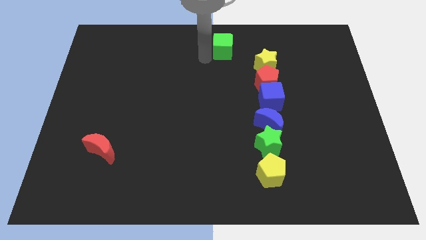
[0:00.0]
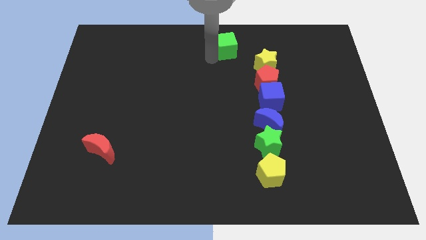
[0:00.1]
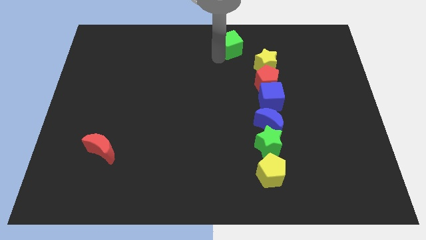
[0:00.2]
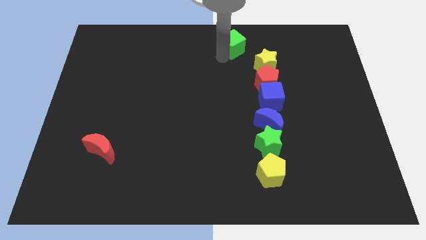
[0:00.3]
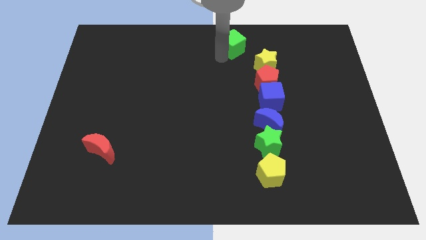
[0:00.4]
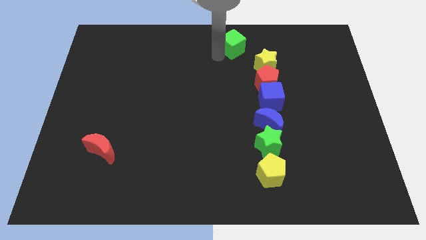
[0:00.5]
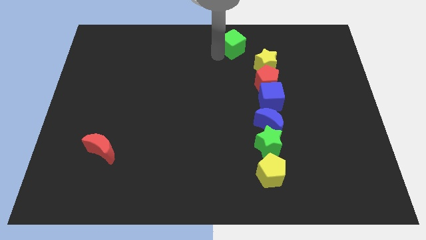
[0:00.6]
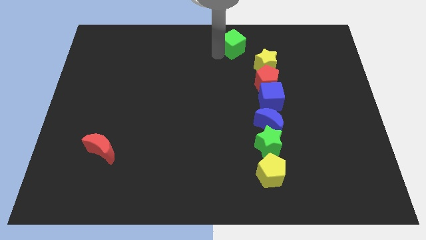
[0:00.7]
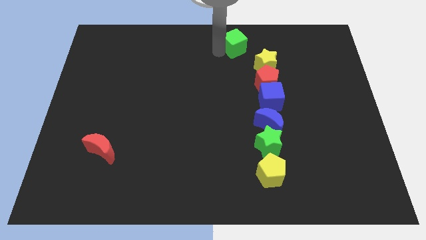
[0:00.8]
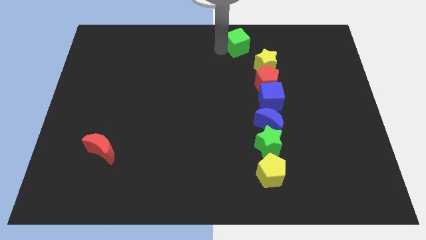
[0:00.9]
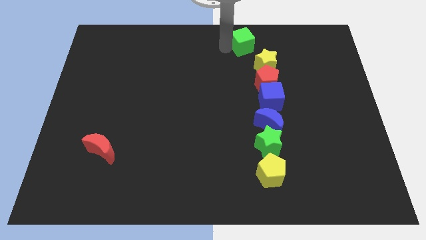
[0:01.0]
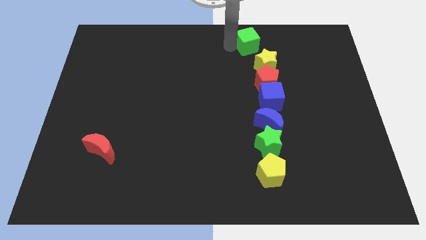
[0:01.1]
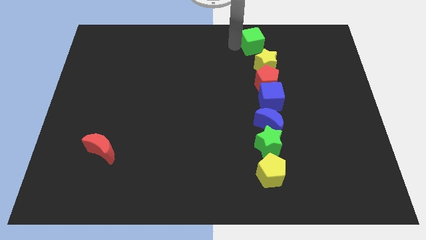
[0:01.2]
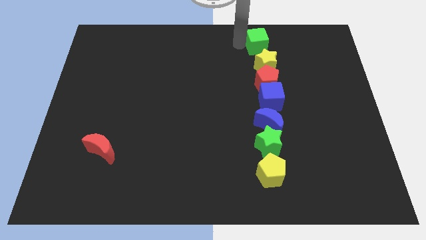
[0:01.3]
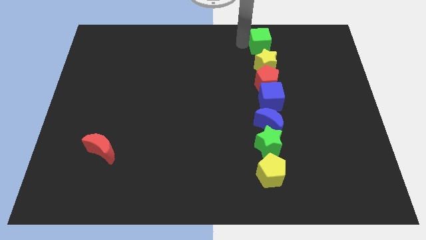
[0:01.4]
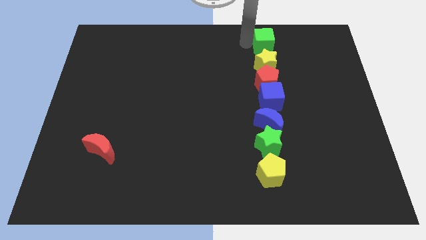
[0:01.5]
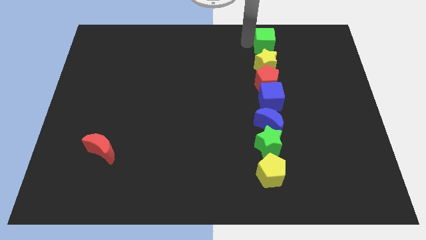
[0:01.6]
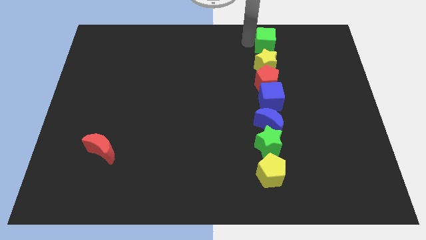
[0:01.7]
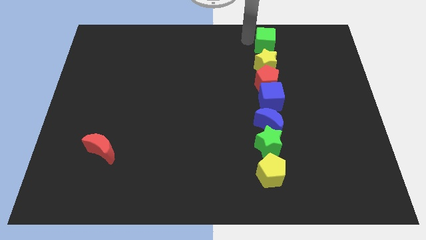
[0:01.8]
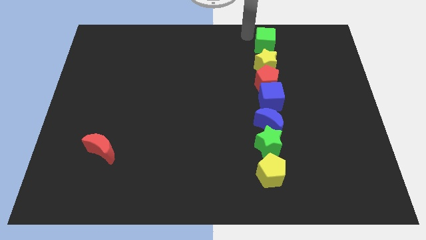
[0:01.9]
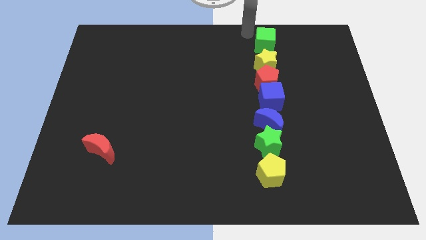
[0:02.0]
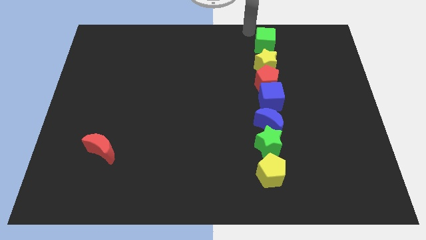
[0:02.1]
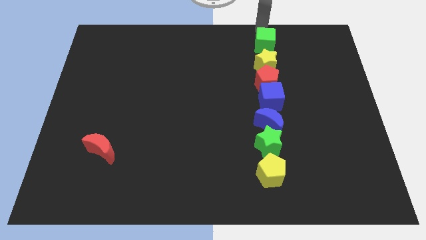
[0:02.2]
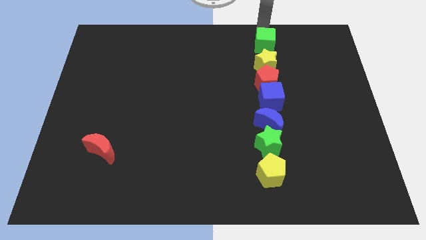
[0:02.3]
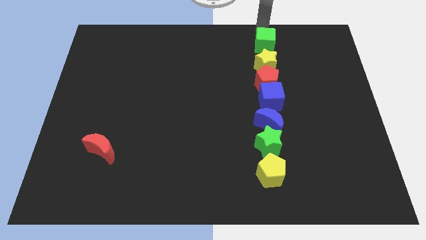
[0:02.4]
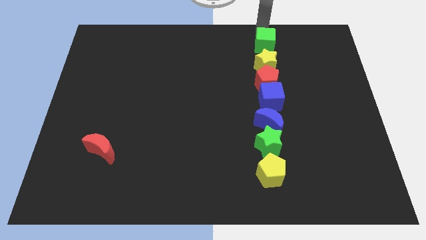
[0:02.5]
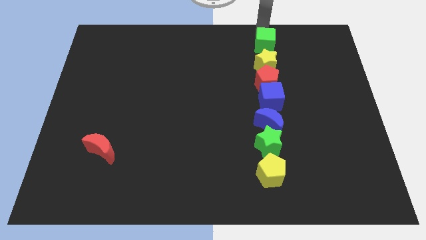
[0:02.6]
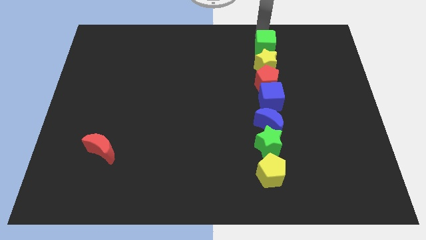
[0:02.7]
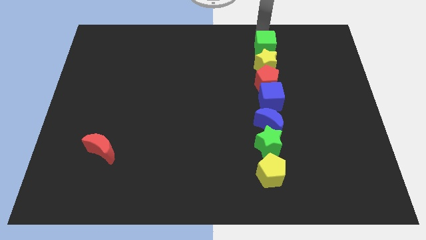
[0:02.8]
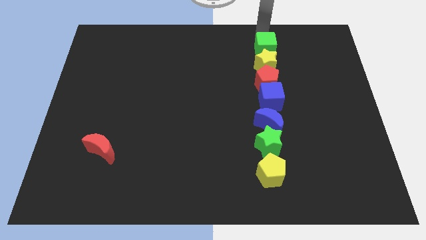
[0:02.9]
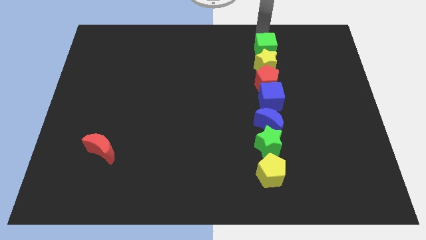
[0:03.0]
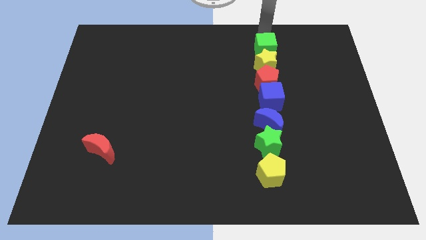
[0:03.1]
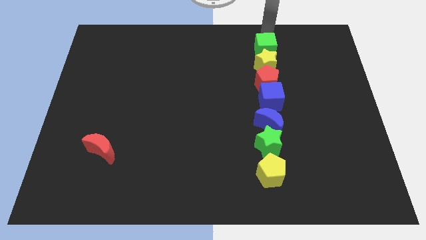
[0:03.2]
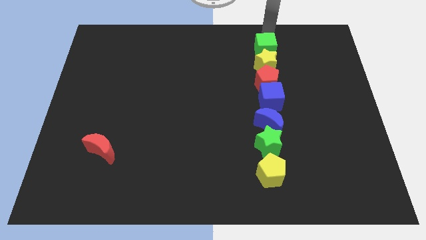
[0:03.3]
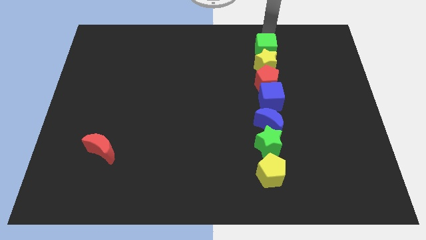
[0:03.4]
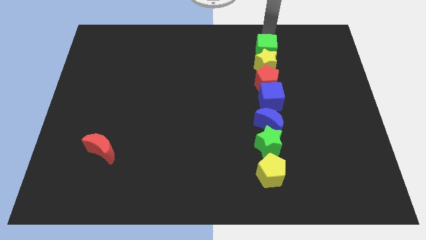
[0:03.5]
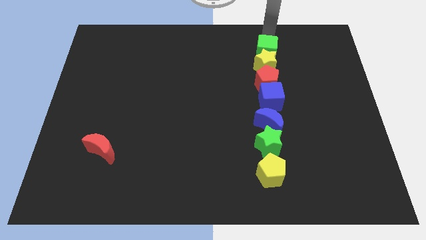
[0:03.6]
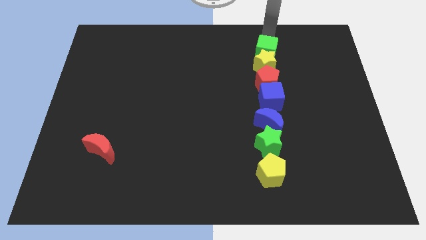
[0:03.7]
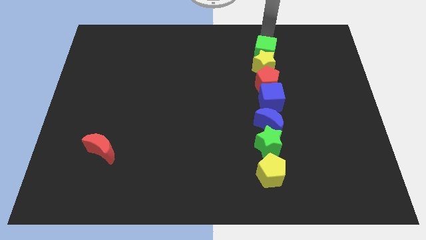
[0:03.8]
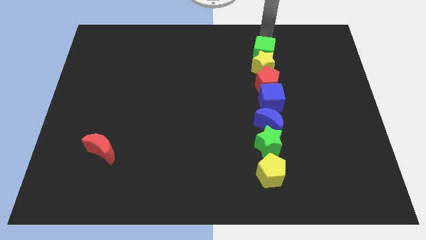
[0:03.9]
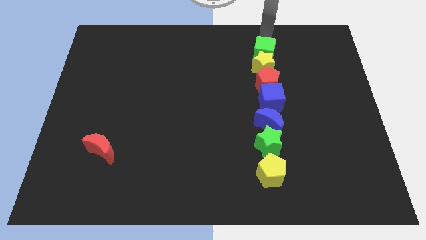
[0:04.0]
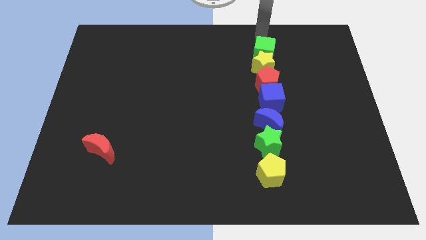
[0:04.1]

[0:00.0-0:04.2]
move the green cube into the yellow star

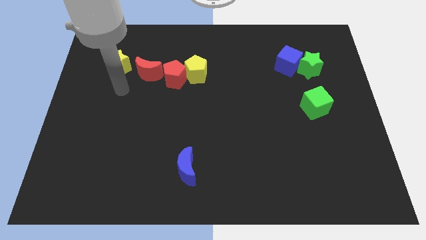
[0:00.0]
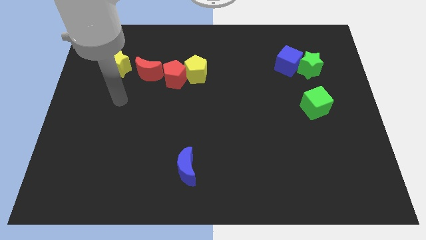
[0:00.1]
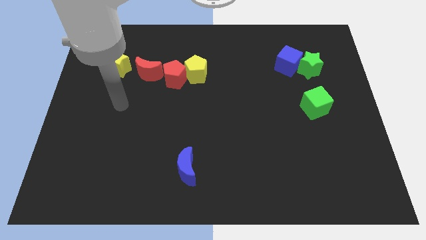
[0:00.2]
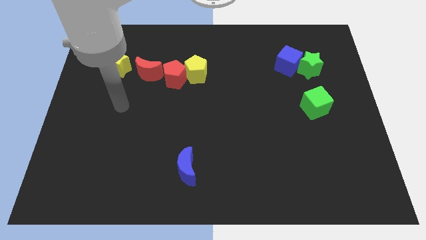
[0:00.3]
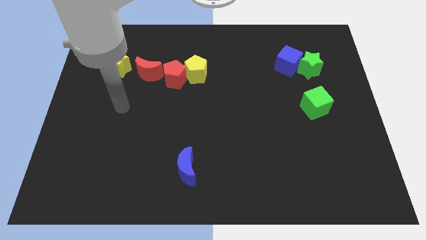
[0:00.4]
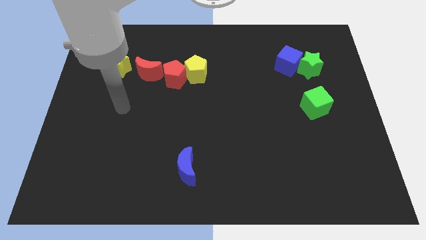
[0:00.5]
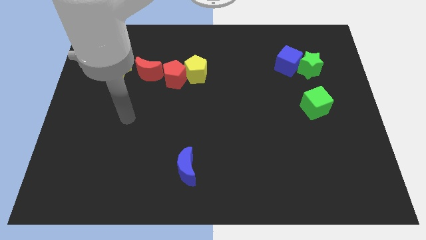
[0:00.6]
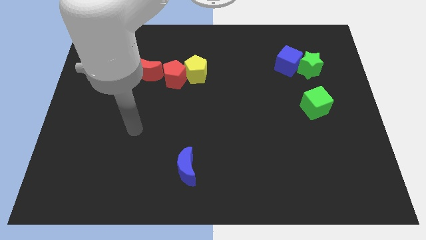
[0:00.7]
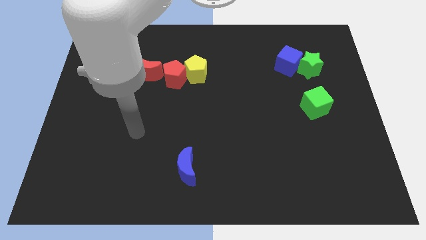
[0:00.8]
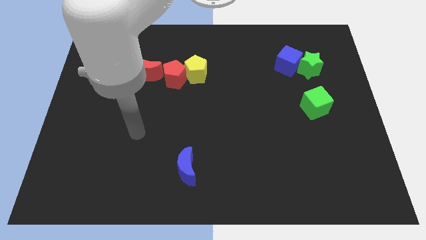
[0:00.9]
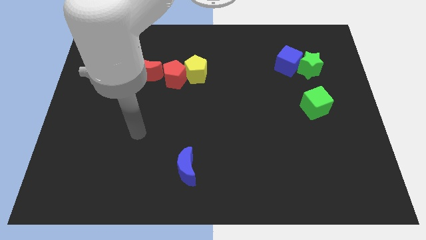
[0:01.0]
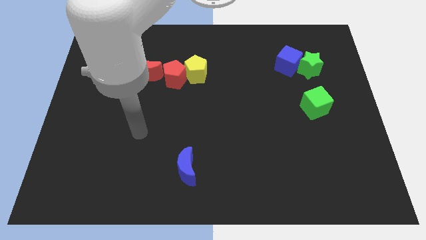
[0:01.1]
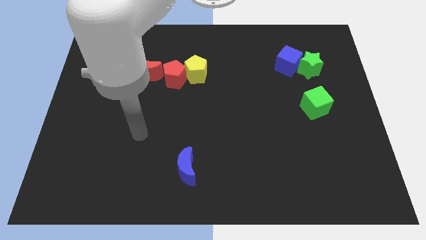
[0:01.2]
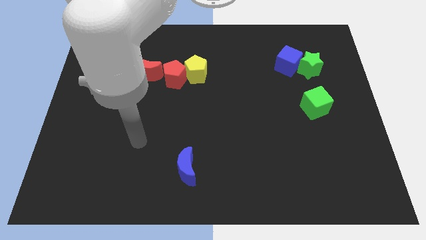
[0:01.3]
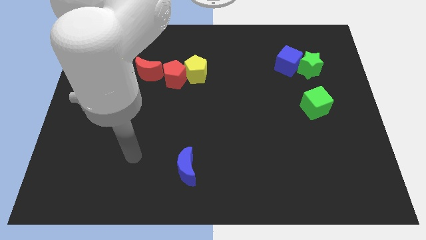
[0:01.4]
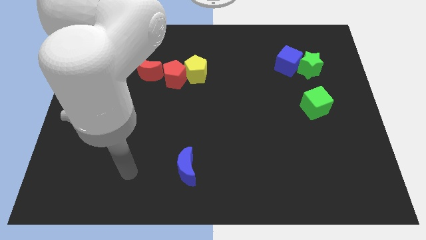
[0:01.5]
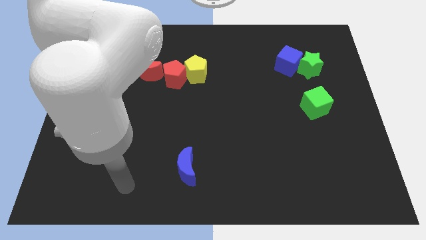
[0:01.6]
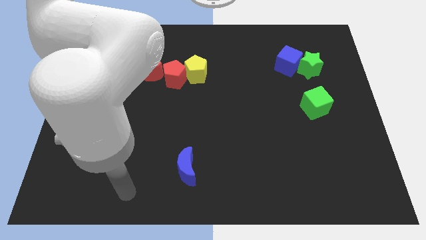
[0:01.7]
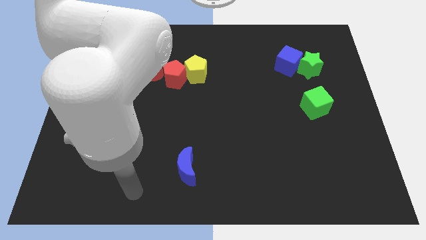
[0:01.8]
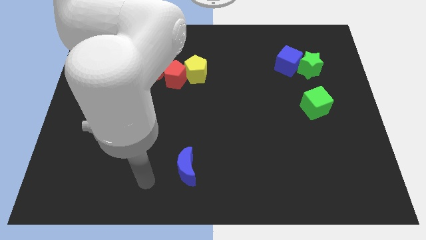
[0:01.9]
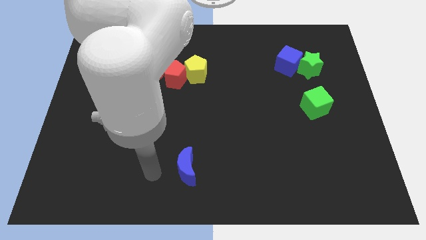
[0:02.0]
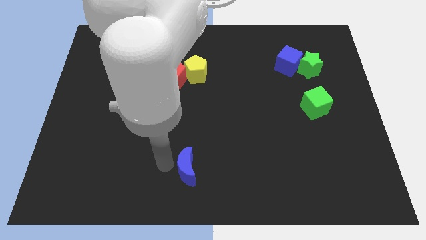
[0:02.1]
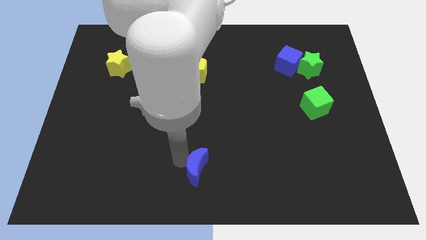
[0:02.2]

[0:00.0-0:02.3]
move your arm away from the yellow star

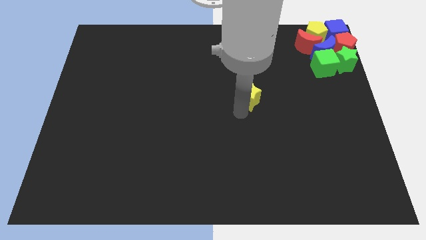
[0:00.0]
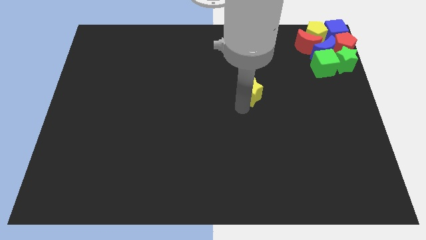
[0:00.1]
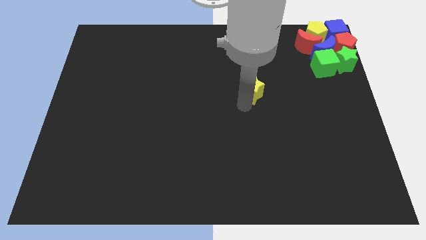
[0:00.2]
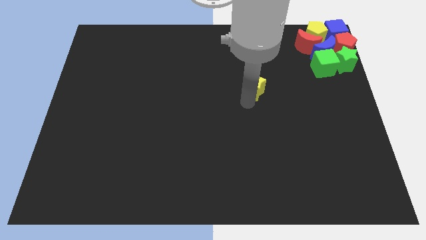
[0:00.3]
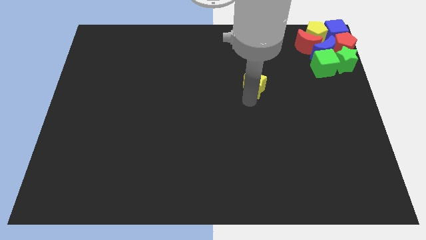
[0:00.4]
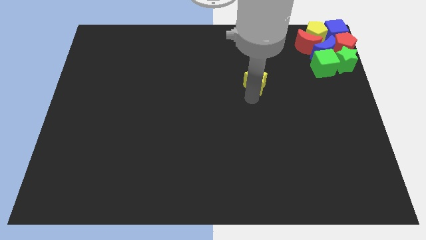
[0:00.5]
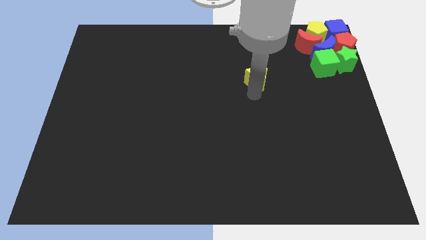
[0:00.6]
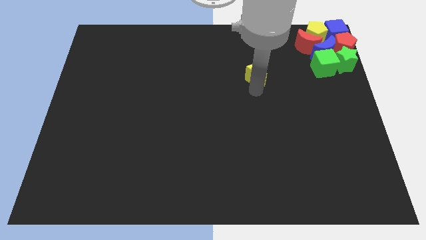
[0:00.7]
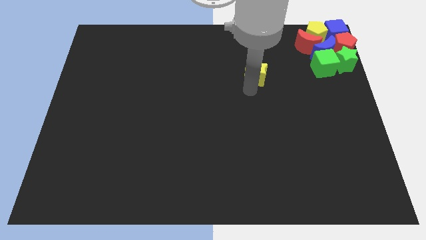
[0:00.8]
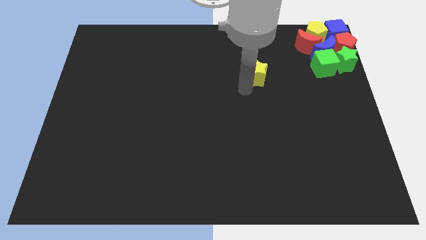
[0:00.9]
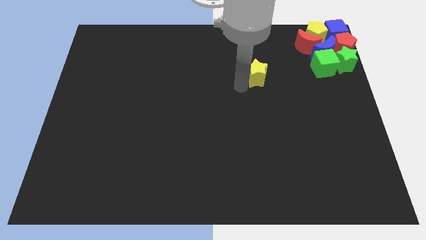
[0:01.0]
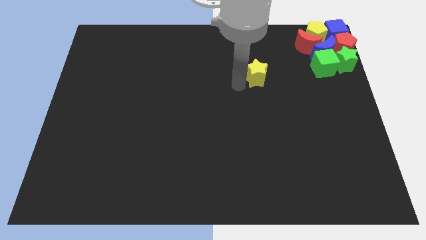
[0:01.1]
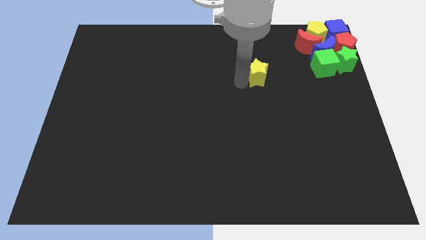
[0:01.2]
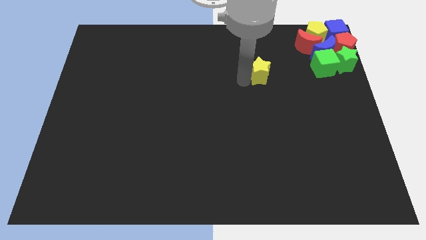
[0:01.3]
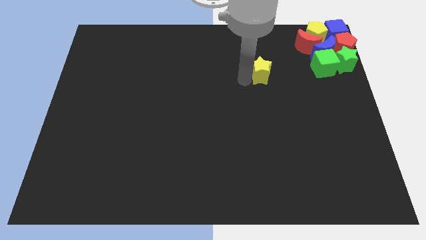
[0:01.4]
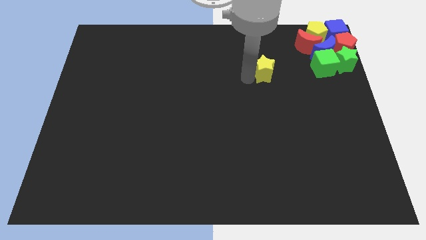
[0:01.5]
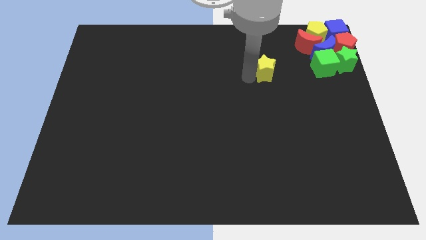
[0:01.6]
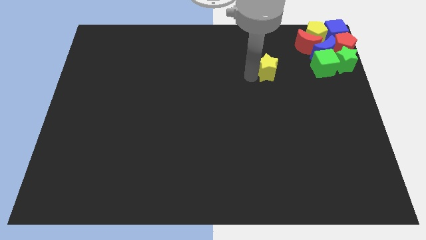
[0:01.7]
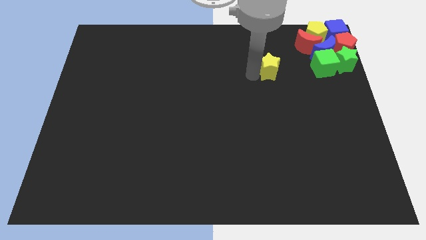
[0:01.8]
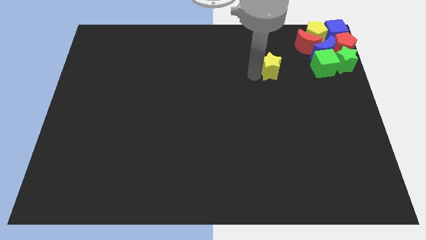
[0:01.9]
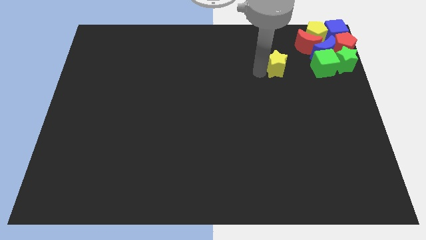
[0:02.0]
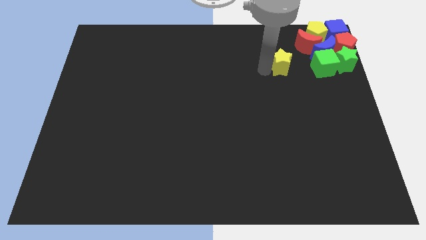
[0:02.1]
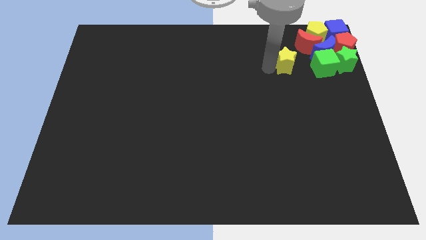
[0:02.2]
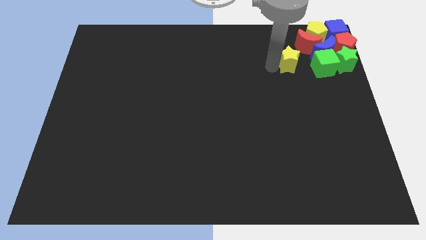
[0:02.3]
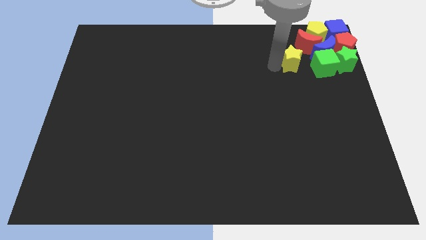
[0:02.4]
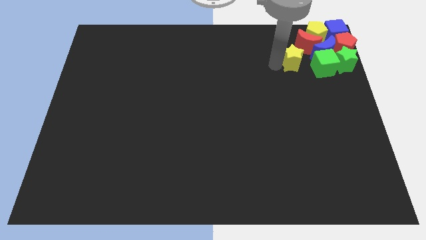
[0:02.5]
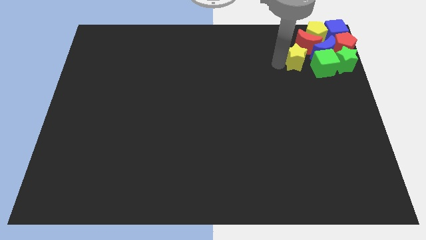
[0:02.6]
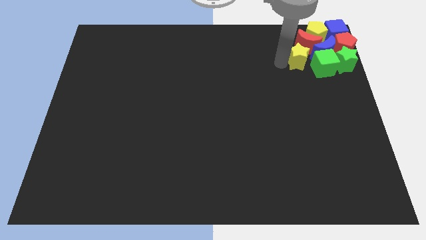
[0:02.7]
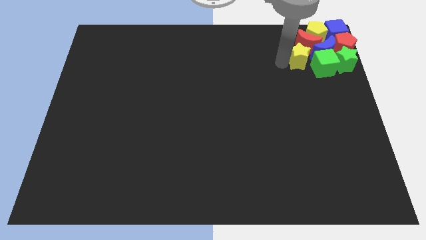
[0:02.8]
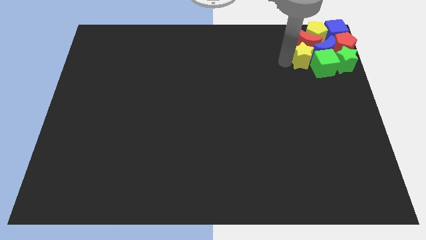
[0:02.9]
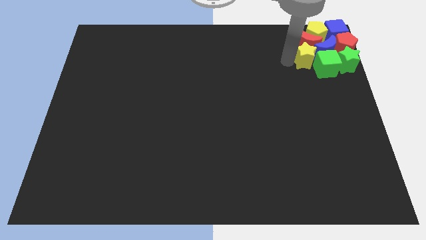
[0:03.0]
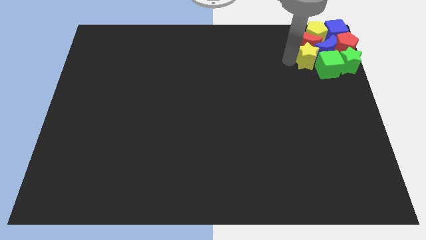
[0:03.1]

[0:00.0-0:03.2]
move the yellow star into the group of blocks
